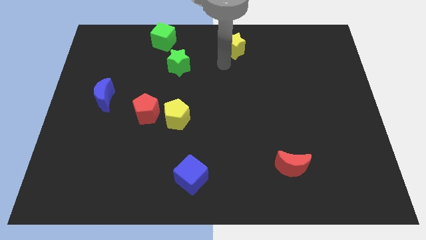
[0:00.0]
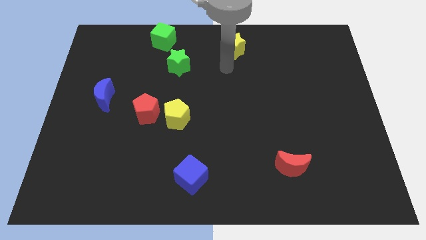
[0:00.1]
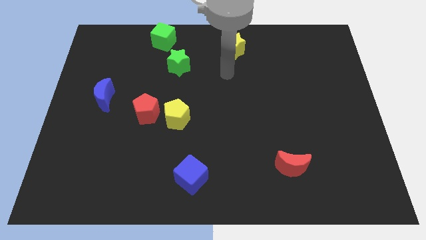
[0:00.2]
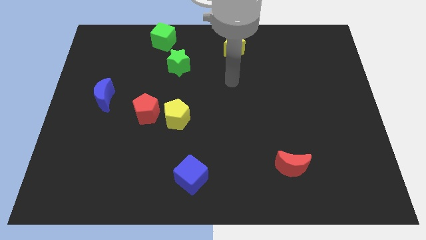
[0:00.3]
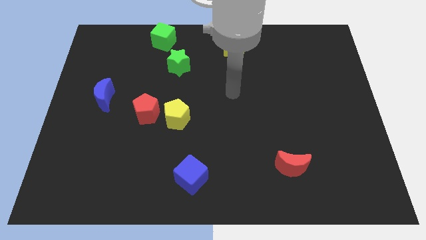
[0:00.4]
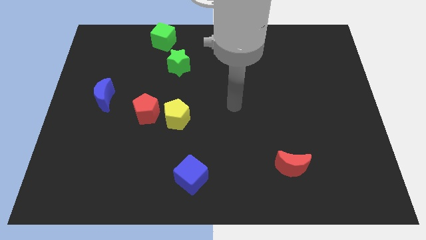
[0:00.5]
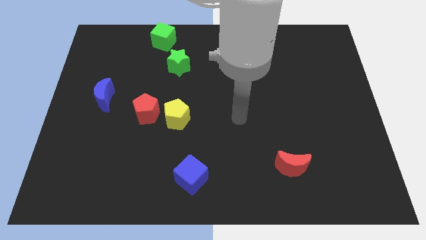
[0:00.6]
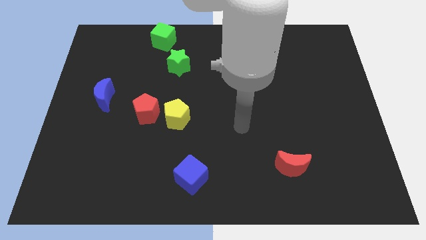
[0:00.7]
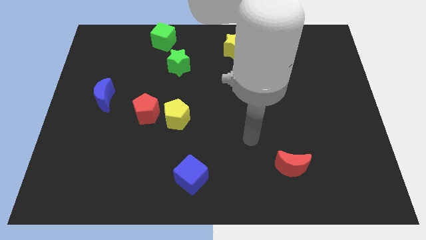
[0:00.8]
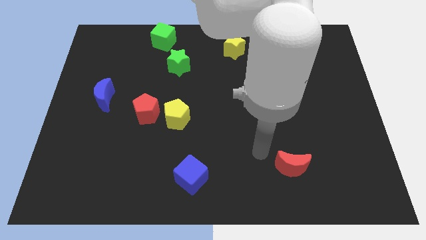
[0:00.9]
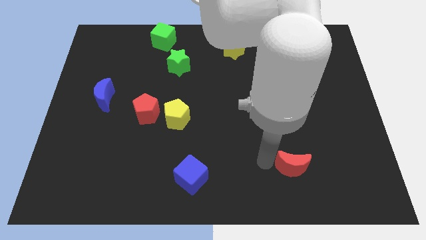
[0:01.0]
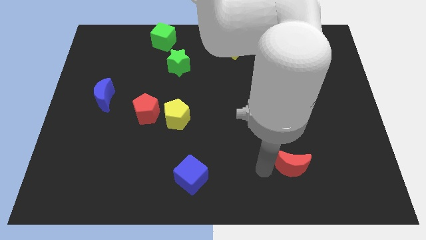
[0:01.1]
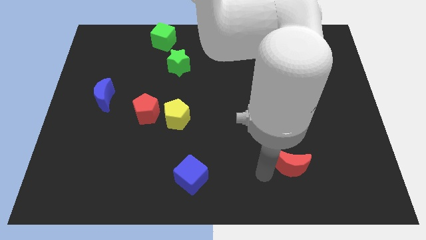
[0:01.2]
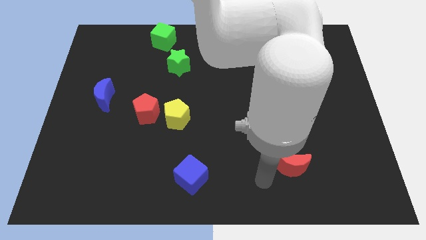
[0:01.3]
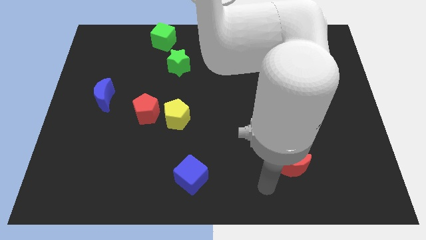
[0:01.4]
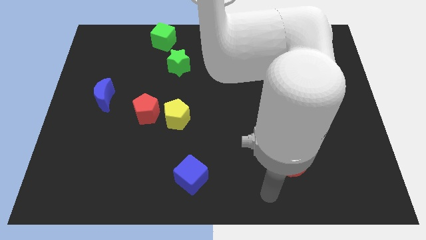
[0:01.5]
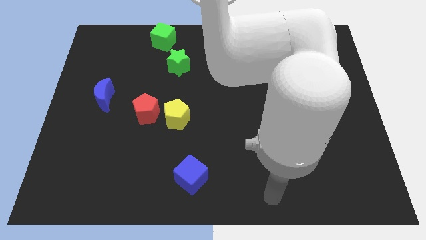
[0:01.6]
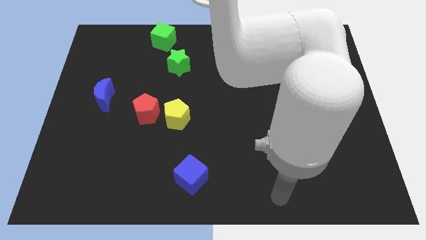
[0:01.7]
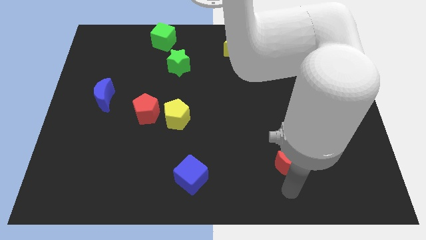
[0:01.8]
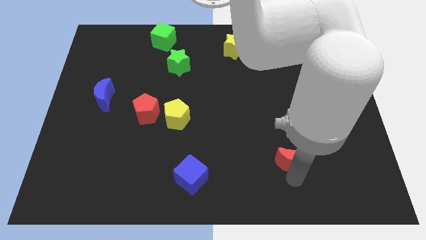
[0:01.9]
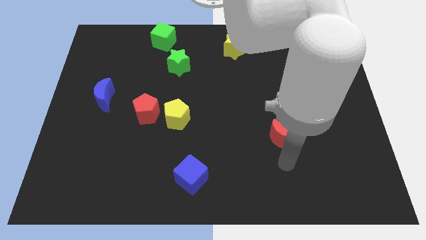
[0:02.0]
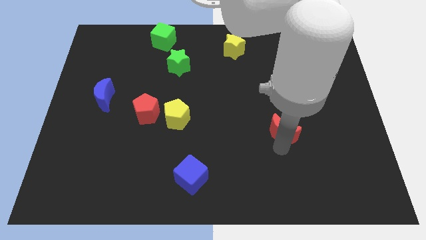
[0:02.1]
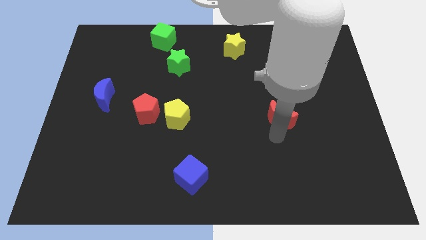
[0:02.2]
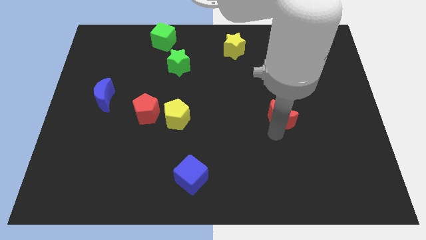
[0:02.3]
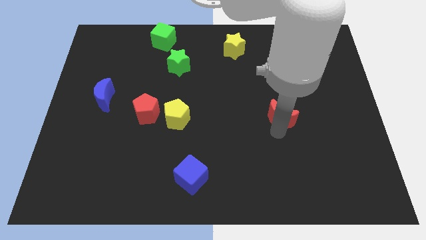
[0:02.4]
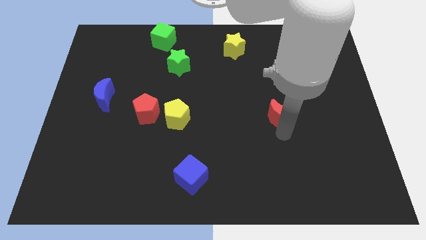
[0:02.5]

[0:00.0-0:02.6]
move the red moon horizontally at the right side of the yellow pentagon

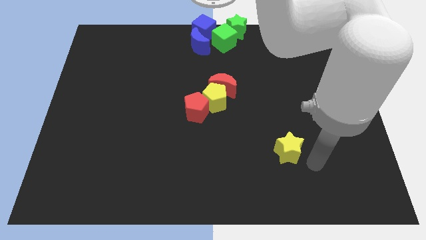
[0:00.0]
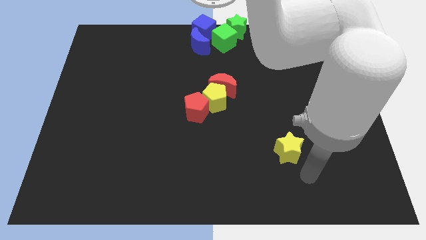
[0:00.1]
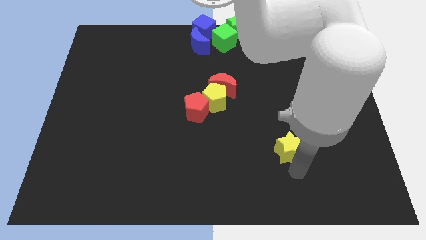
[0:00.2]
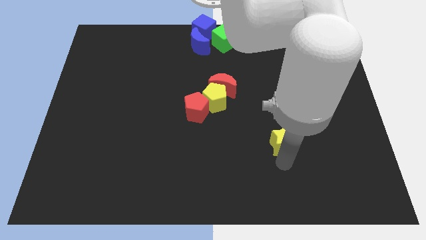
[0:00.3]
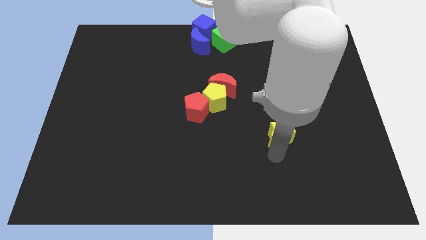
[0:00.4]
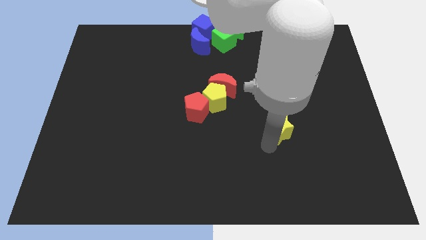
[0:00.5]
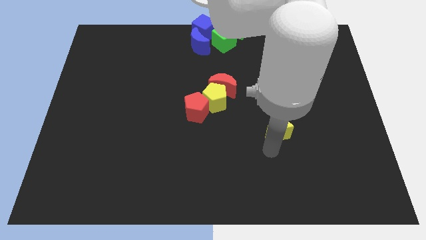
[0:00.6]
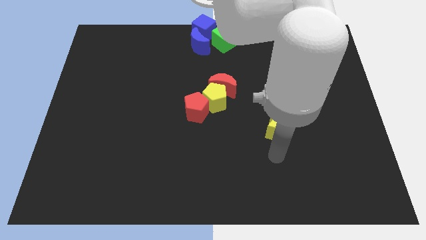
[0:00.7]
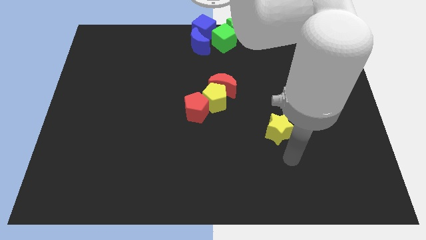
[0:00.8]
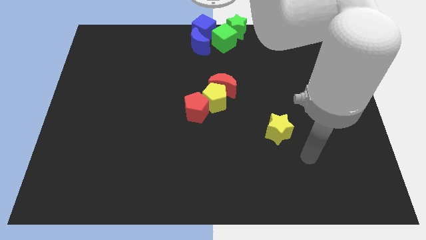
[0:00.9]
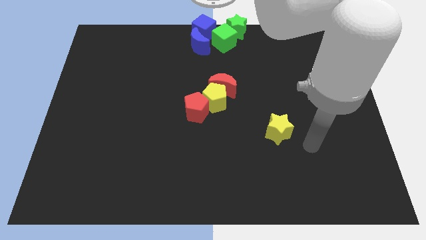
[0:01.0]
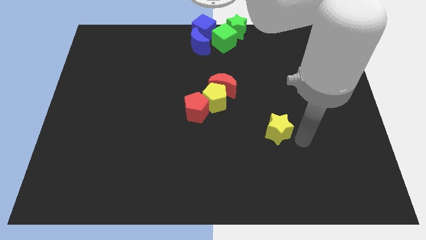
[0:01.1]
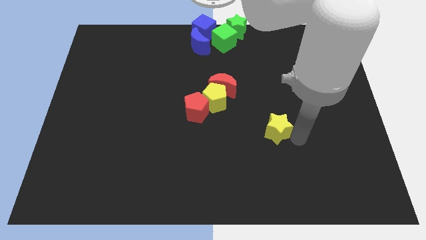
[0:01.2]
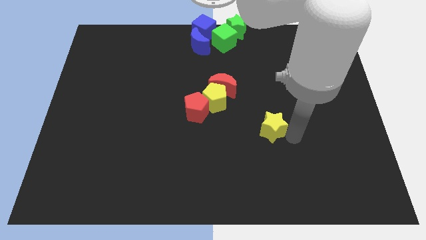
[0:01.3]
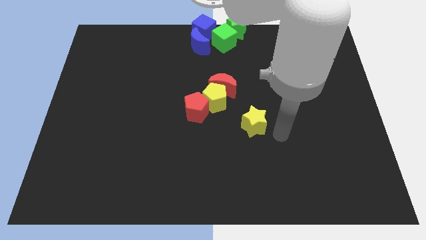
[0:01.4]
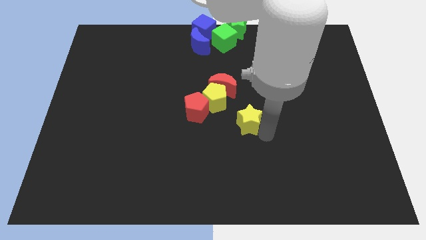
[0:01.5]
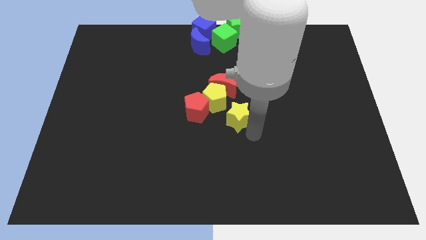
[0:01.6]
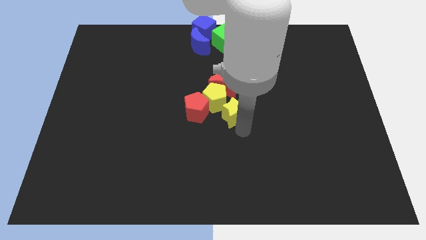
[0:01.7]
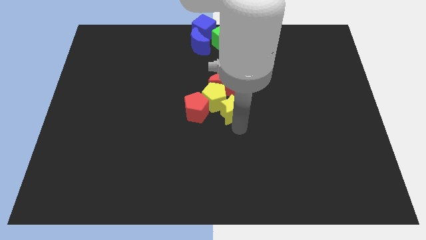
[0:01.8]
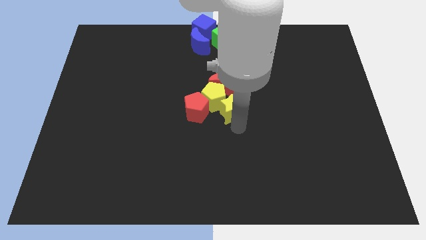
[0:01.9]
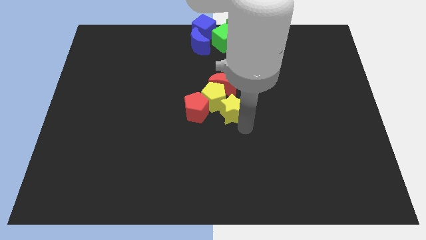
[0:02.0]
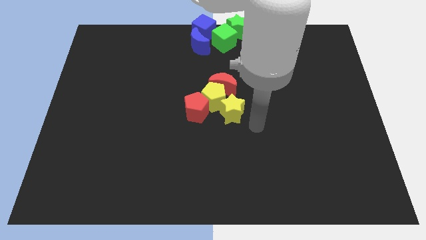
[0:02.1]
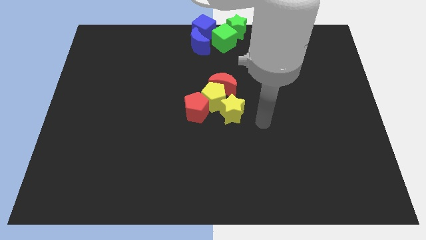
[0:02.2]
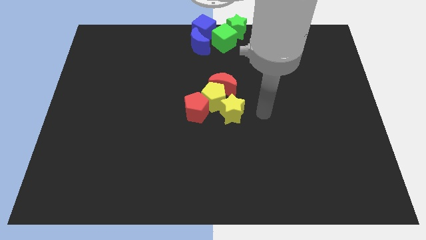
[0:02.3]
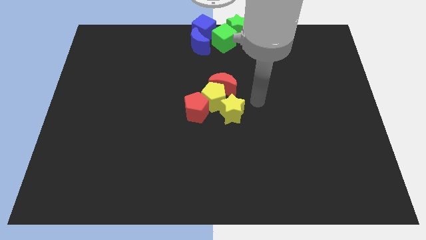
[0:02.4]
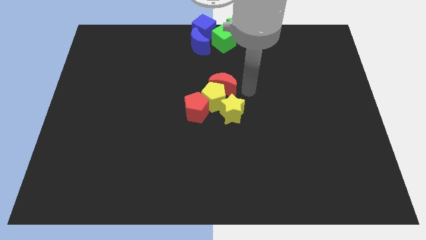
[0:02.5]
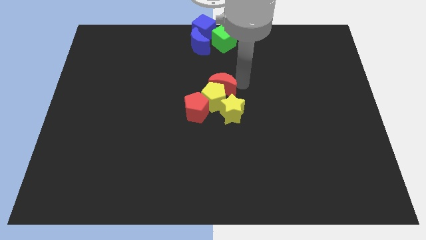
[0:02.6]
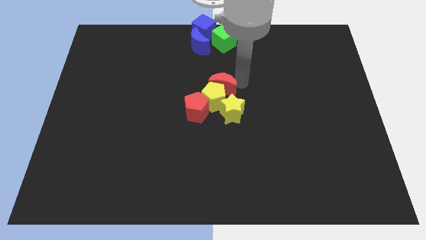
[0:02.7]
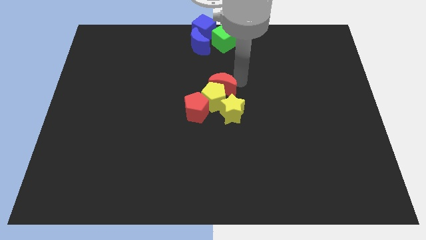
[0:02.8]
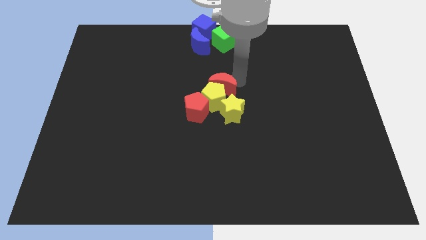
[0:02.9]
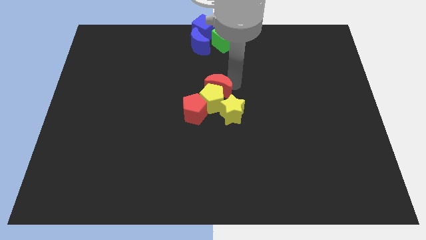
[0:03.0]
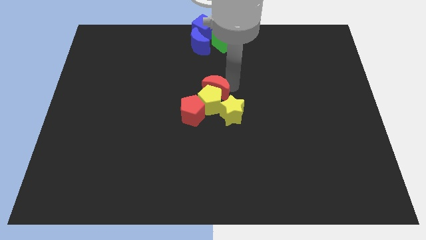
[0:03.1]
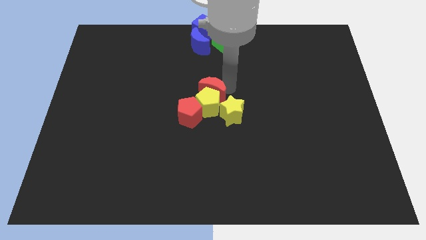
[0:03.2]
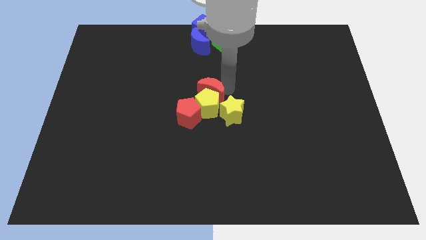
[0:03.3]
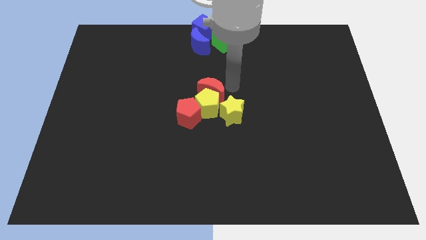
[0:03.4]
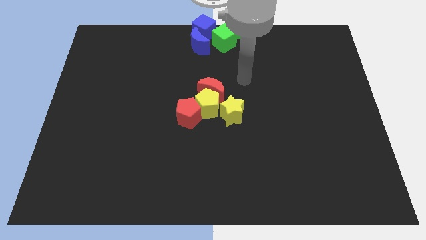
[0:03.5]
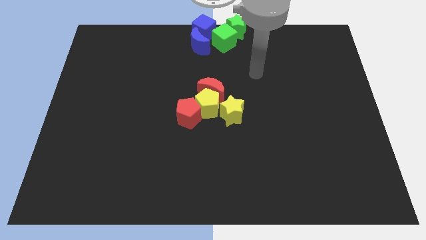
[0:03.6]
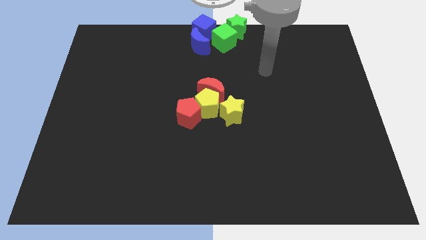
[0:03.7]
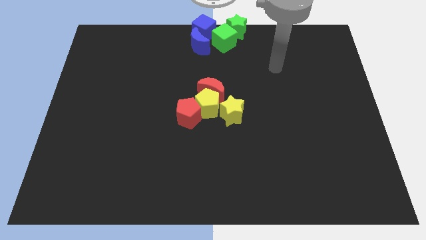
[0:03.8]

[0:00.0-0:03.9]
push the yellow star to the center of the board

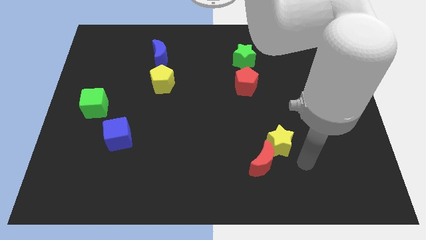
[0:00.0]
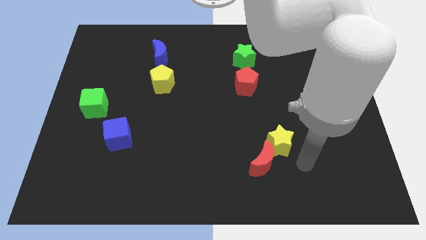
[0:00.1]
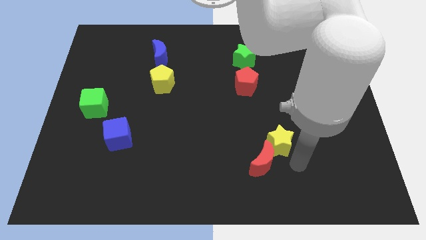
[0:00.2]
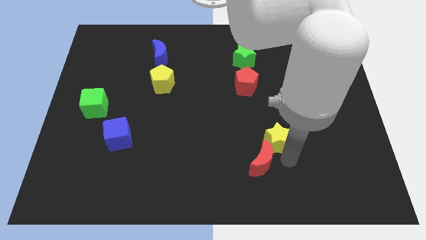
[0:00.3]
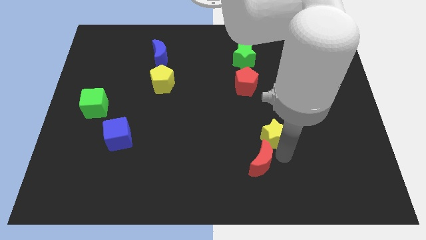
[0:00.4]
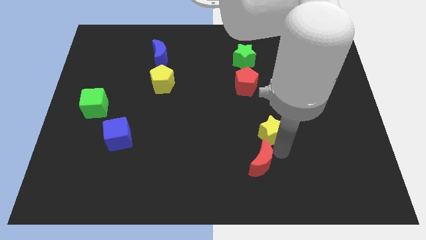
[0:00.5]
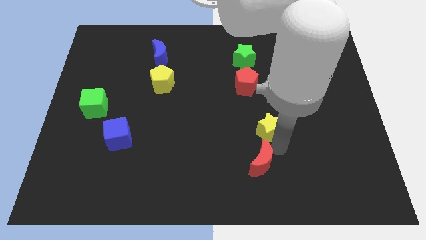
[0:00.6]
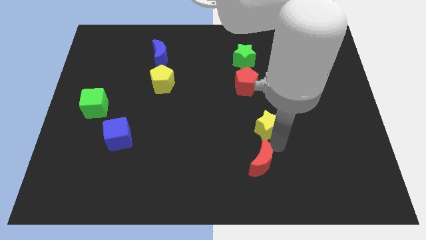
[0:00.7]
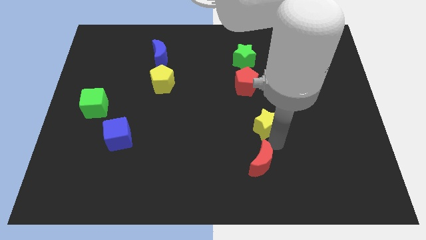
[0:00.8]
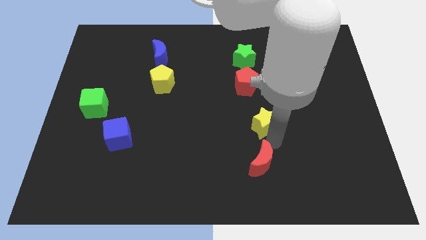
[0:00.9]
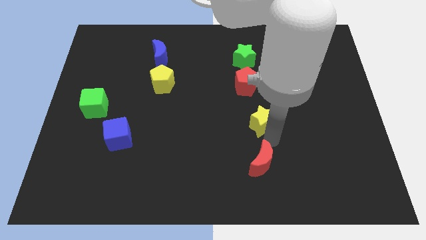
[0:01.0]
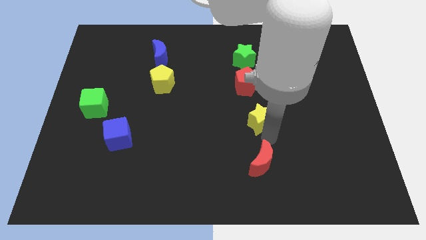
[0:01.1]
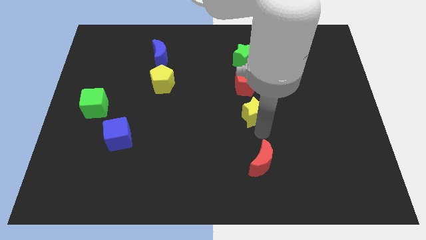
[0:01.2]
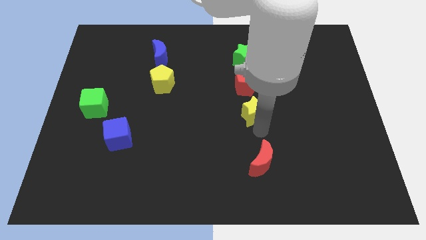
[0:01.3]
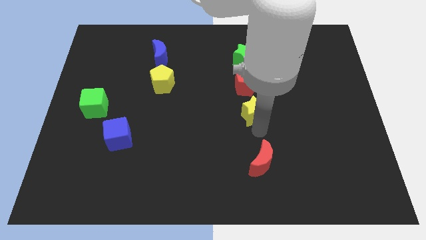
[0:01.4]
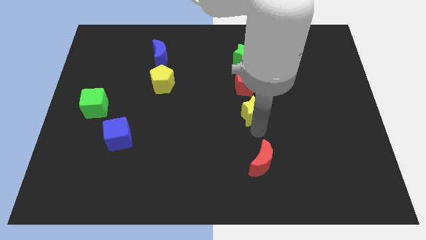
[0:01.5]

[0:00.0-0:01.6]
move yellow star to the bottom of the red pentagon

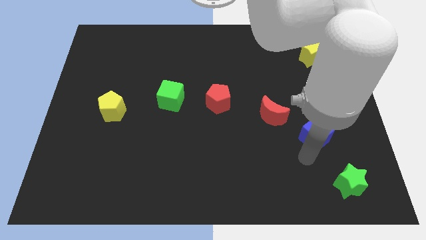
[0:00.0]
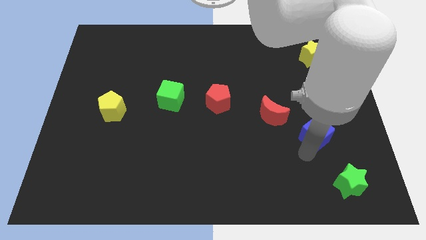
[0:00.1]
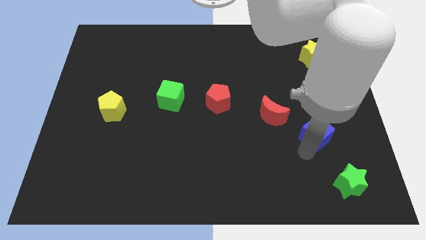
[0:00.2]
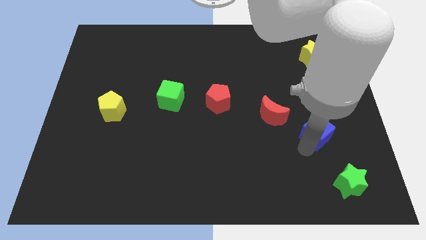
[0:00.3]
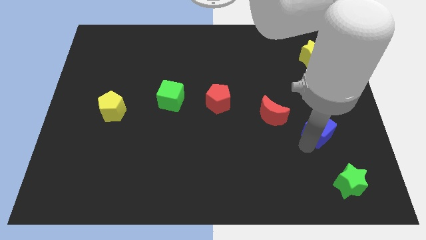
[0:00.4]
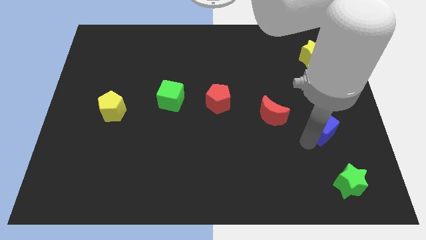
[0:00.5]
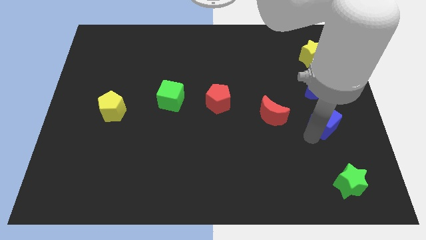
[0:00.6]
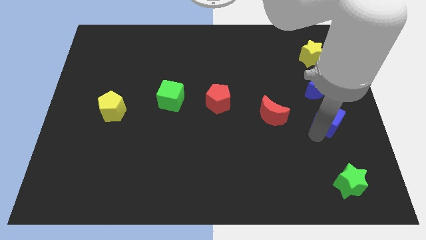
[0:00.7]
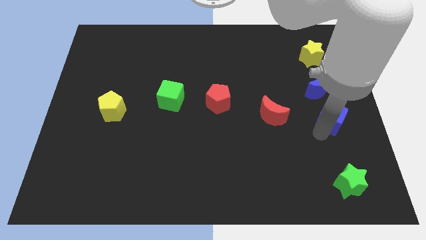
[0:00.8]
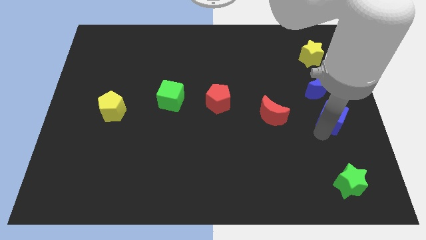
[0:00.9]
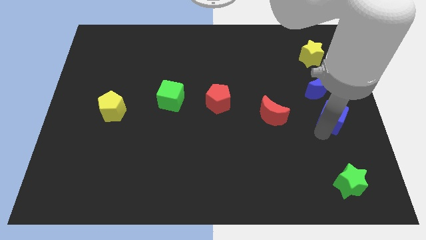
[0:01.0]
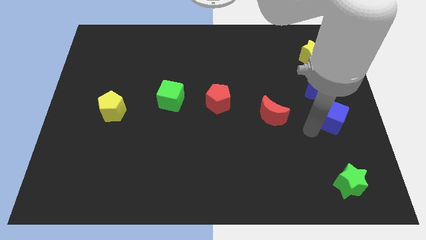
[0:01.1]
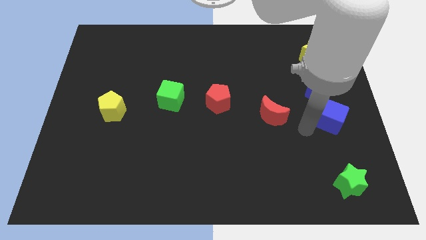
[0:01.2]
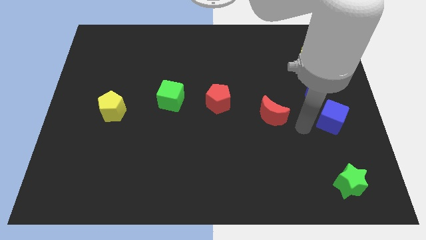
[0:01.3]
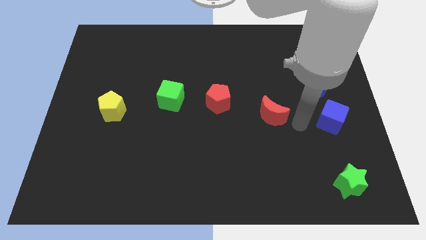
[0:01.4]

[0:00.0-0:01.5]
place the blue cube below the blue moon
